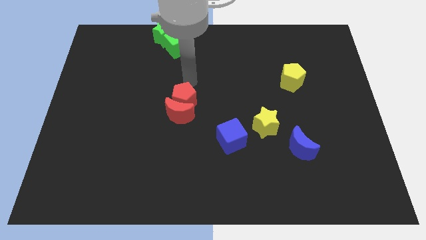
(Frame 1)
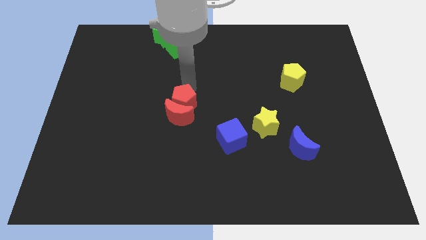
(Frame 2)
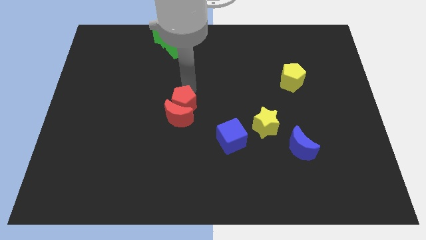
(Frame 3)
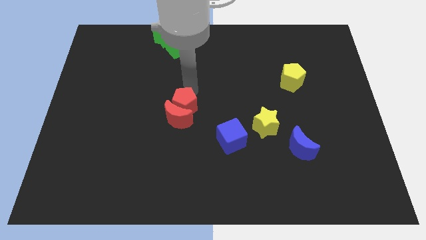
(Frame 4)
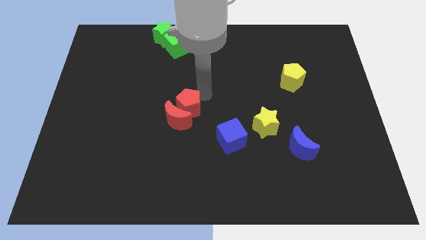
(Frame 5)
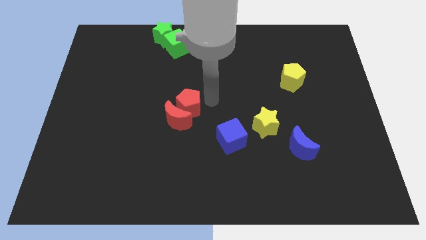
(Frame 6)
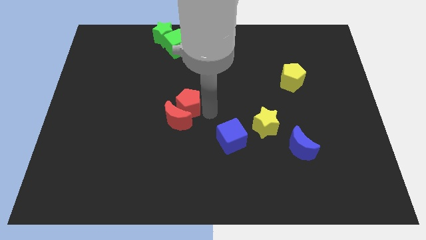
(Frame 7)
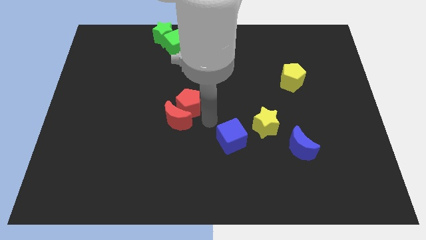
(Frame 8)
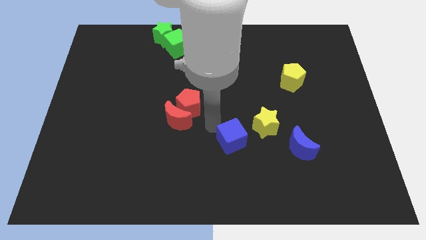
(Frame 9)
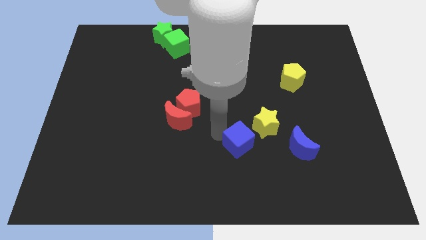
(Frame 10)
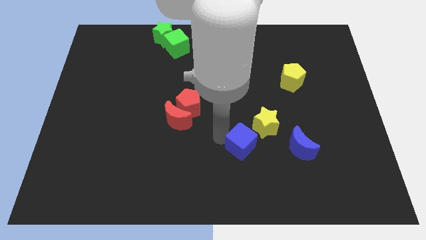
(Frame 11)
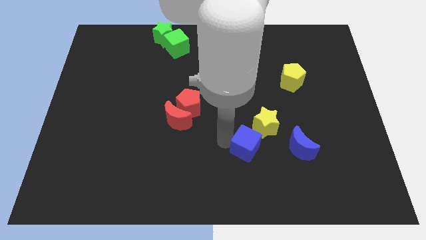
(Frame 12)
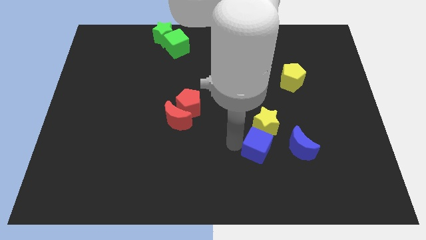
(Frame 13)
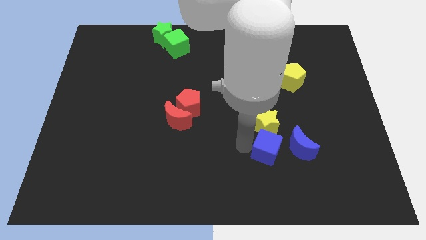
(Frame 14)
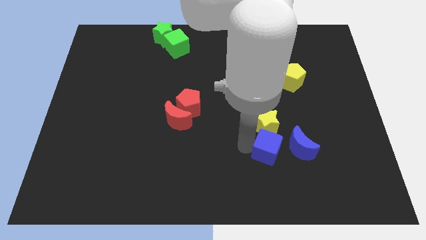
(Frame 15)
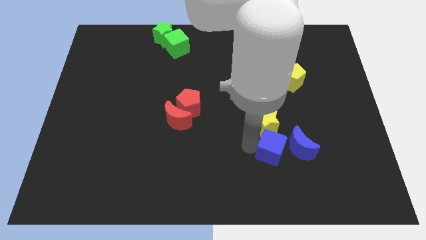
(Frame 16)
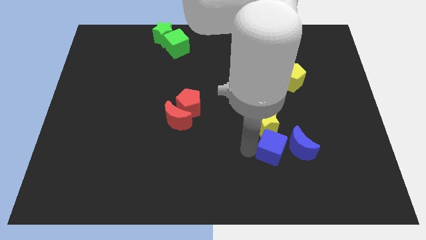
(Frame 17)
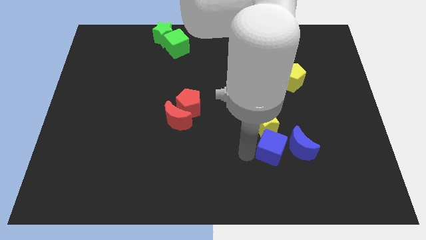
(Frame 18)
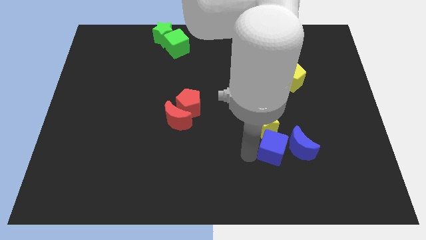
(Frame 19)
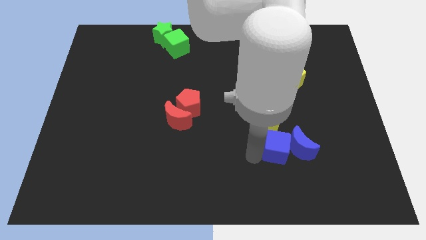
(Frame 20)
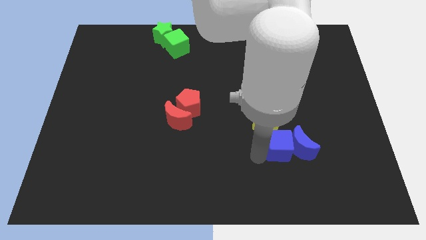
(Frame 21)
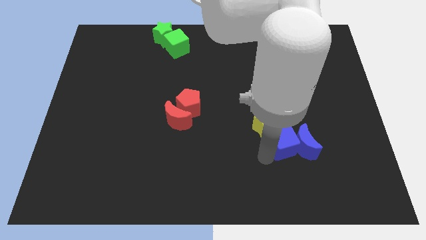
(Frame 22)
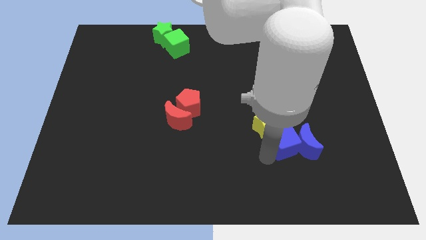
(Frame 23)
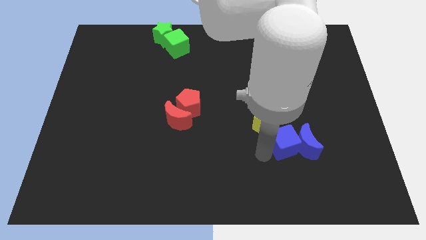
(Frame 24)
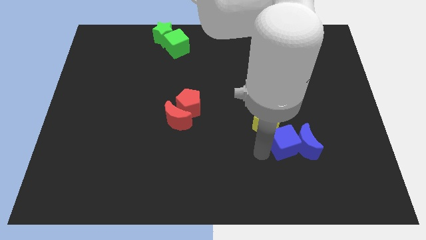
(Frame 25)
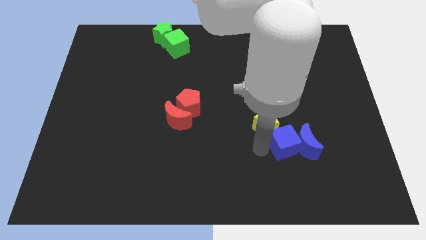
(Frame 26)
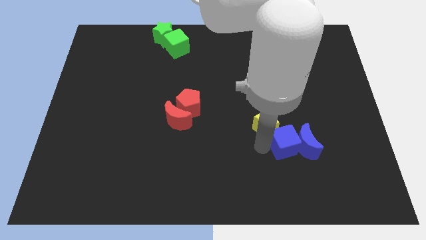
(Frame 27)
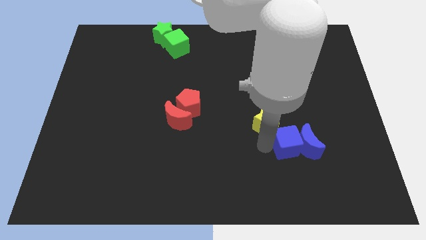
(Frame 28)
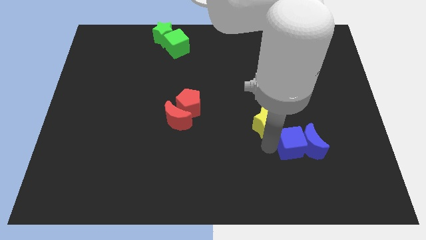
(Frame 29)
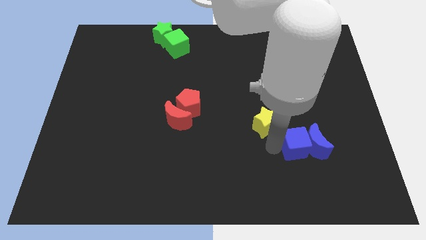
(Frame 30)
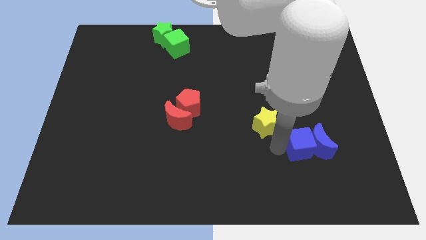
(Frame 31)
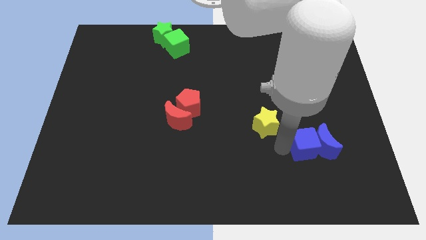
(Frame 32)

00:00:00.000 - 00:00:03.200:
push the blue cube into the blue crescent

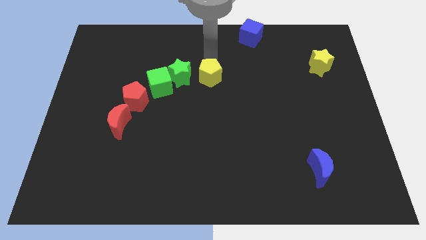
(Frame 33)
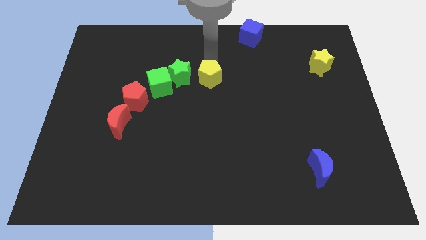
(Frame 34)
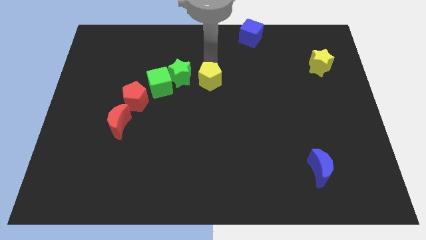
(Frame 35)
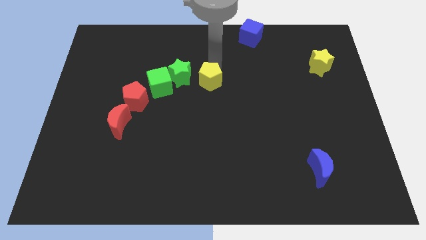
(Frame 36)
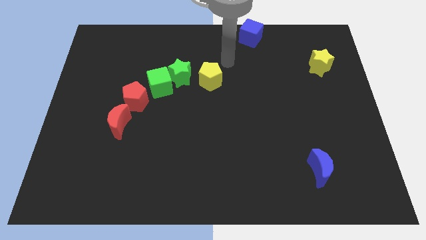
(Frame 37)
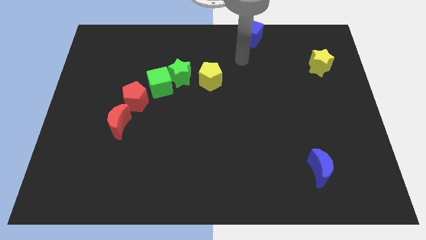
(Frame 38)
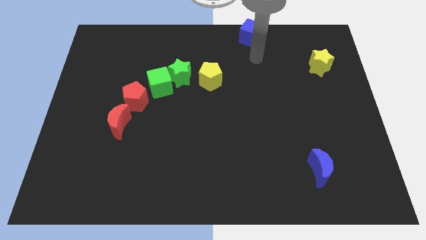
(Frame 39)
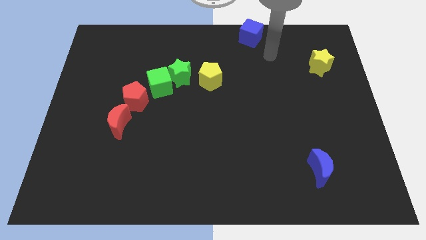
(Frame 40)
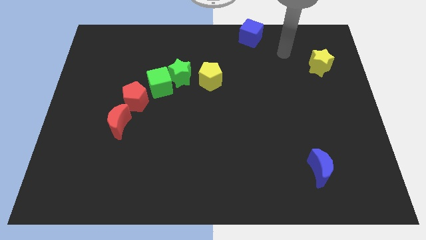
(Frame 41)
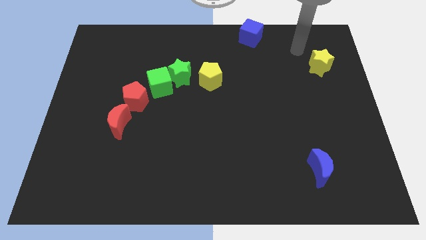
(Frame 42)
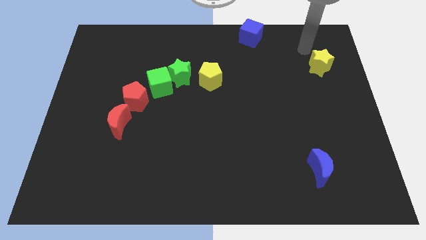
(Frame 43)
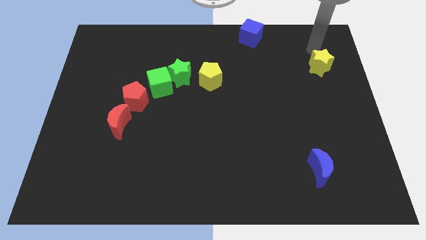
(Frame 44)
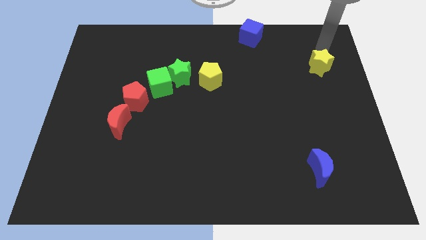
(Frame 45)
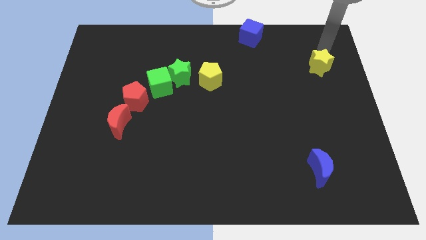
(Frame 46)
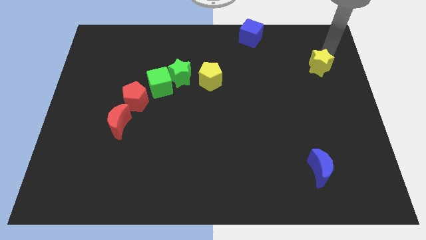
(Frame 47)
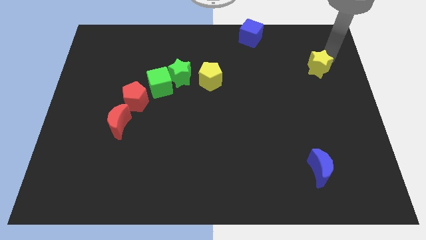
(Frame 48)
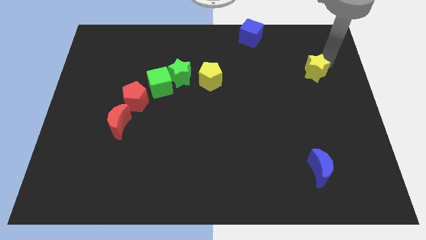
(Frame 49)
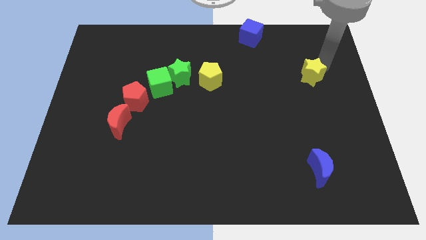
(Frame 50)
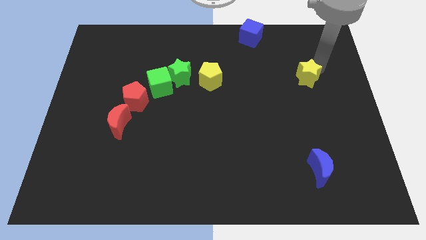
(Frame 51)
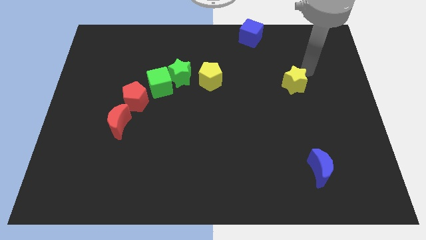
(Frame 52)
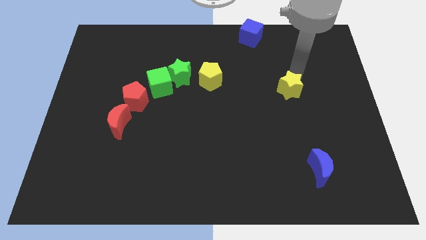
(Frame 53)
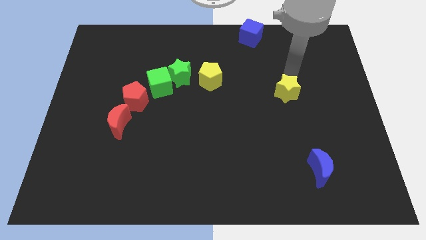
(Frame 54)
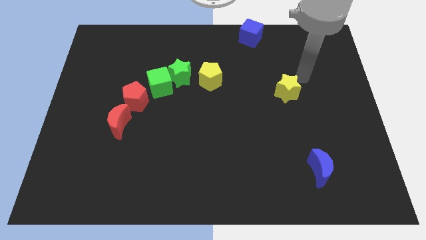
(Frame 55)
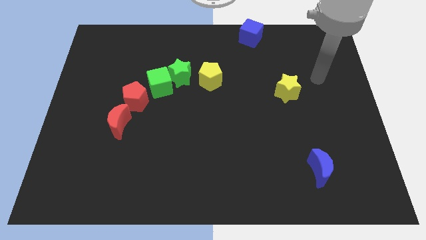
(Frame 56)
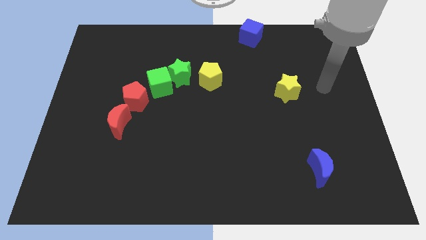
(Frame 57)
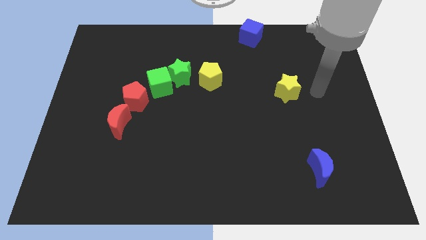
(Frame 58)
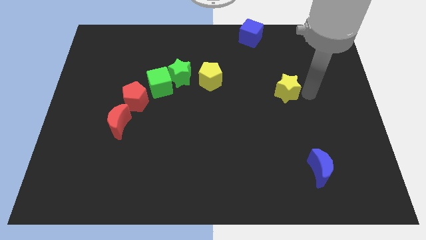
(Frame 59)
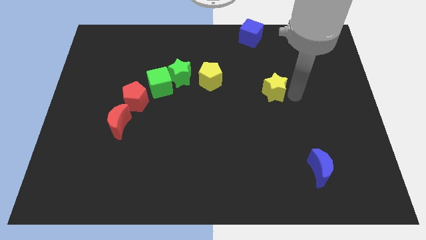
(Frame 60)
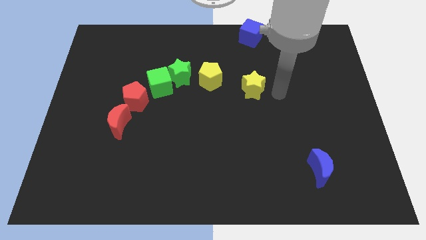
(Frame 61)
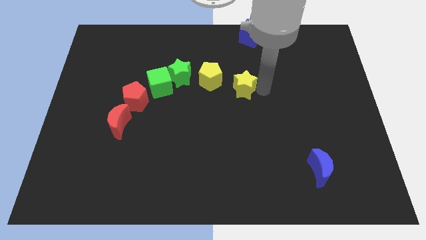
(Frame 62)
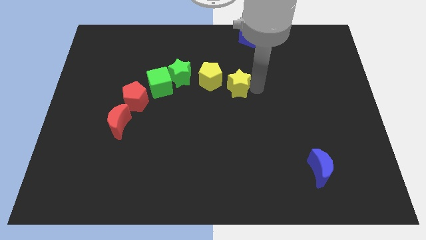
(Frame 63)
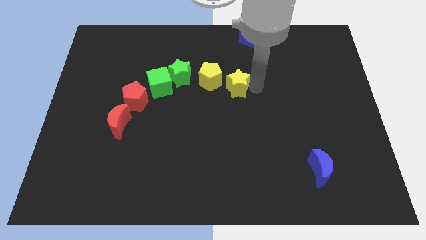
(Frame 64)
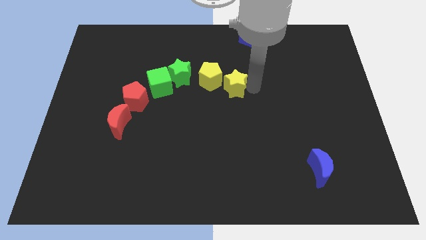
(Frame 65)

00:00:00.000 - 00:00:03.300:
place the yellow star diagonally to the bottom right of yellow pentagon

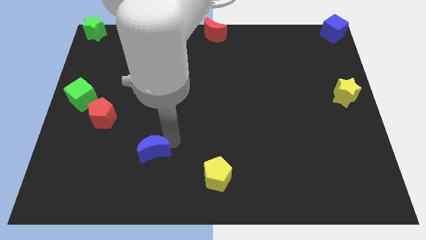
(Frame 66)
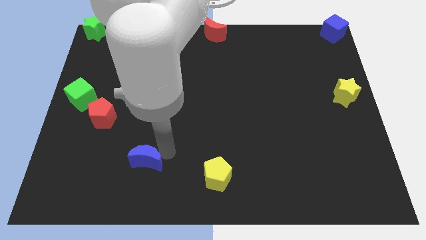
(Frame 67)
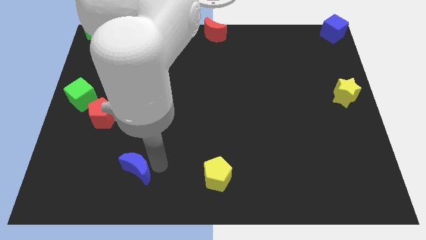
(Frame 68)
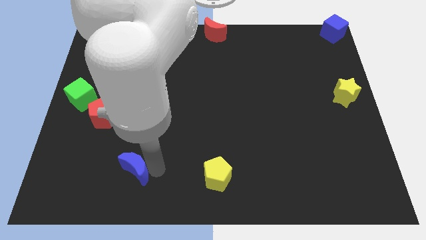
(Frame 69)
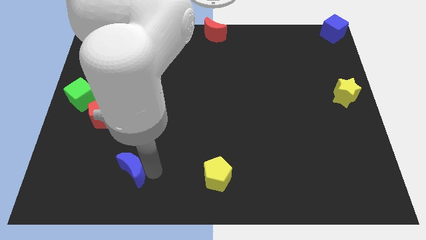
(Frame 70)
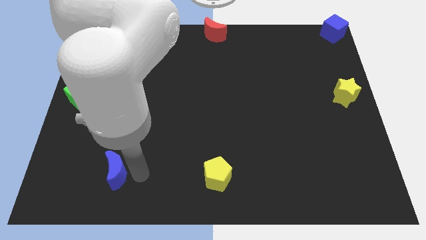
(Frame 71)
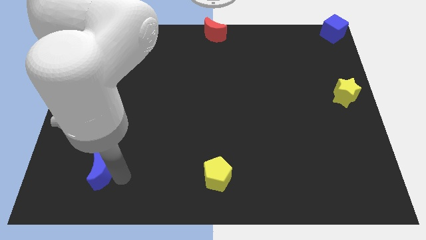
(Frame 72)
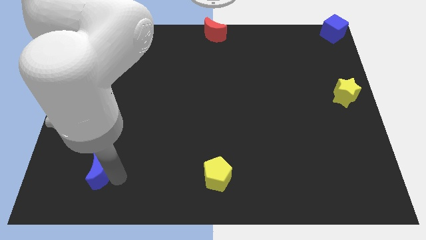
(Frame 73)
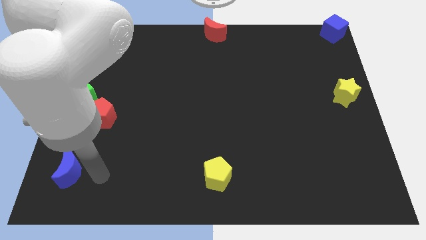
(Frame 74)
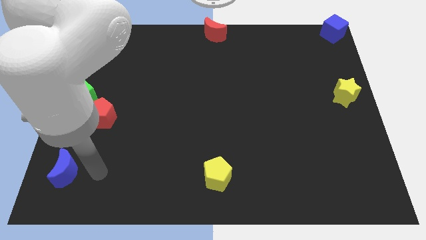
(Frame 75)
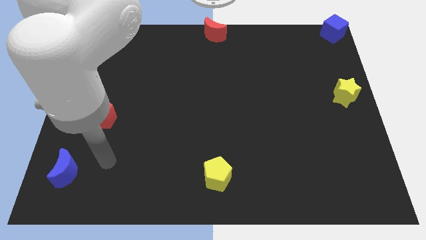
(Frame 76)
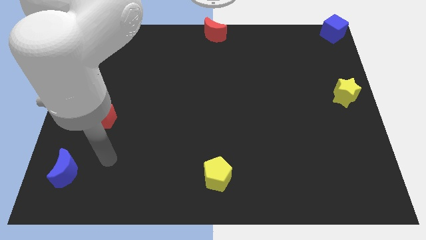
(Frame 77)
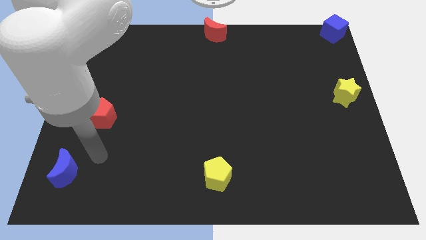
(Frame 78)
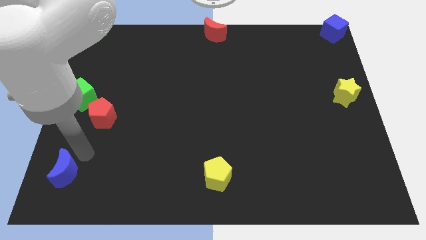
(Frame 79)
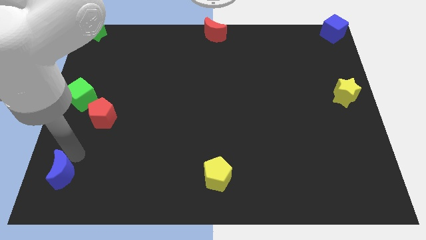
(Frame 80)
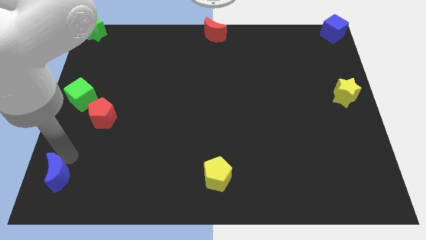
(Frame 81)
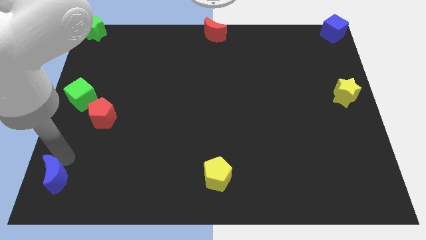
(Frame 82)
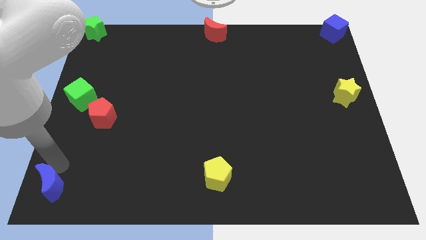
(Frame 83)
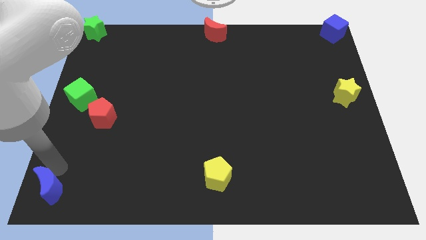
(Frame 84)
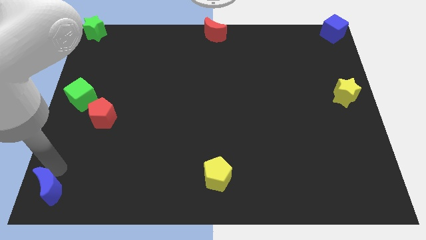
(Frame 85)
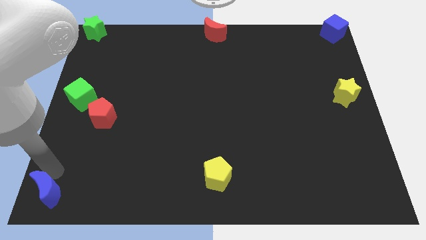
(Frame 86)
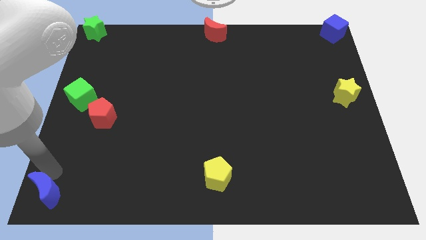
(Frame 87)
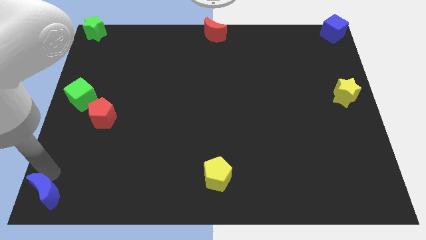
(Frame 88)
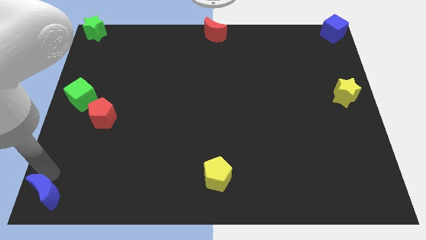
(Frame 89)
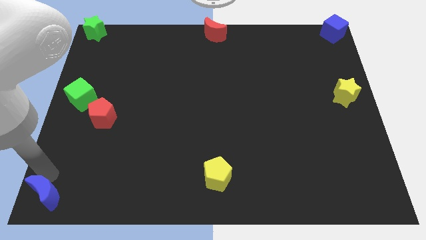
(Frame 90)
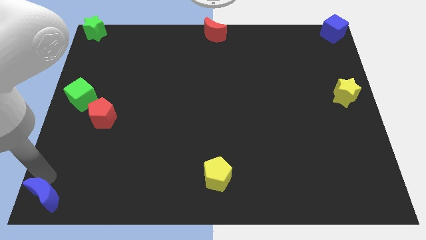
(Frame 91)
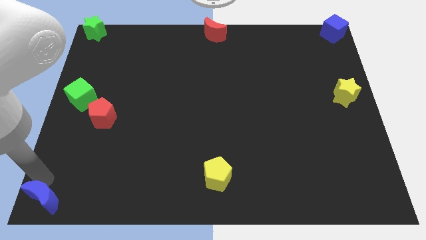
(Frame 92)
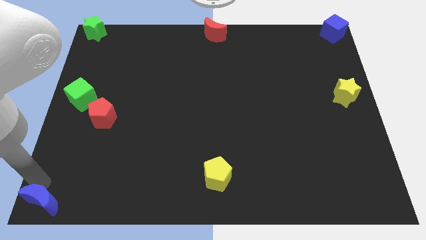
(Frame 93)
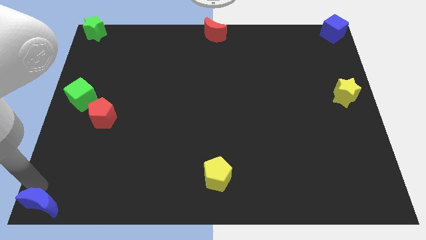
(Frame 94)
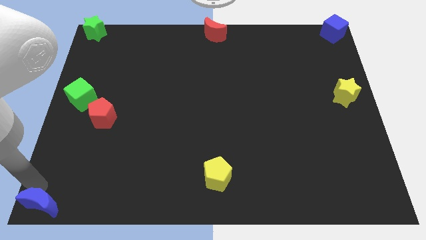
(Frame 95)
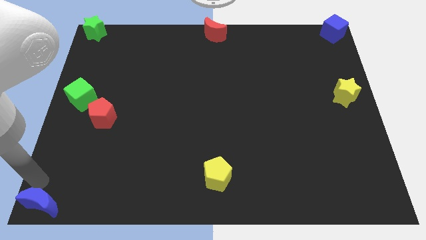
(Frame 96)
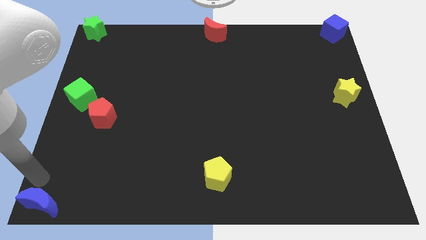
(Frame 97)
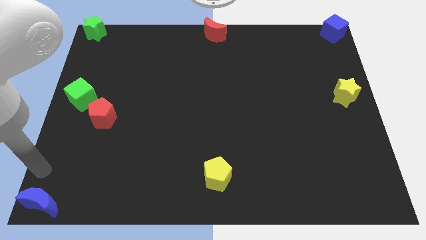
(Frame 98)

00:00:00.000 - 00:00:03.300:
take the blue crescent to the bottom left corner of the board
